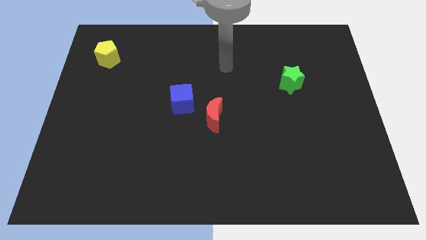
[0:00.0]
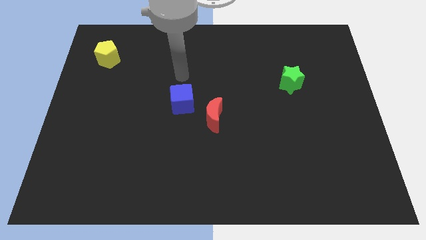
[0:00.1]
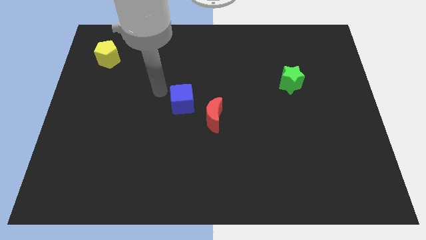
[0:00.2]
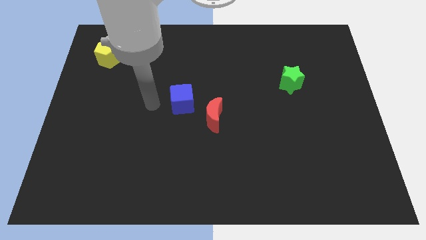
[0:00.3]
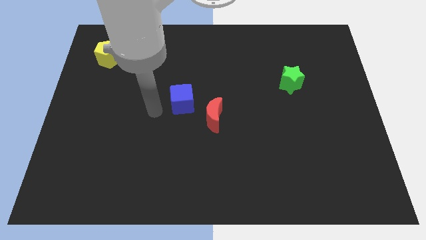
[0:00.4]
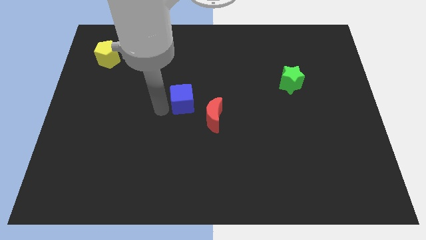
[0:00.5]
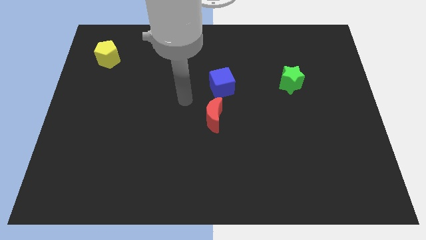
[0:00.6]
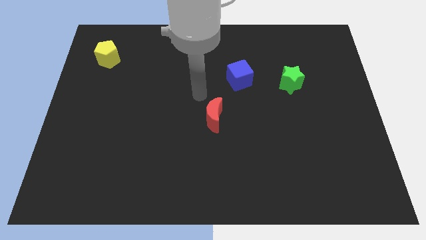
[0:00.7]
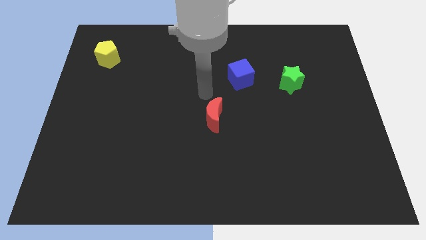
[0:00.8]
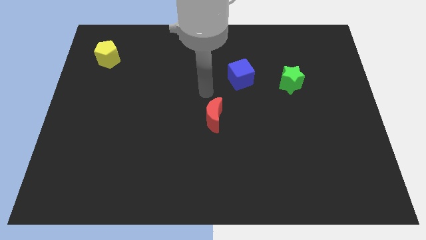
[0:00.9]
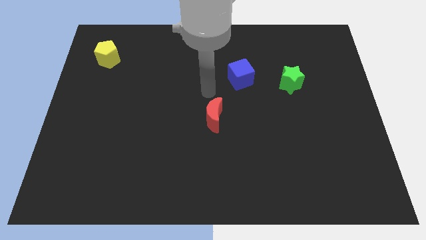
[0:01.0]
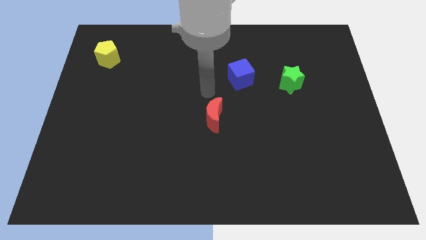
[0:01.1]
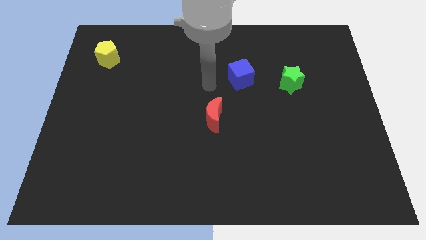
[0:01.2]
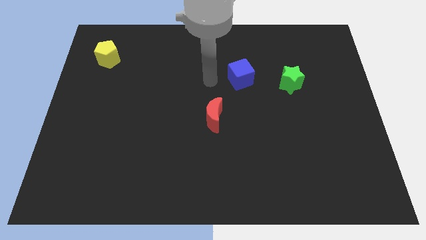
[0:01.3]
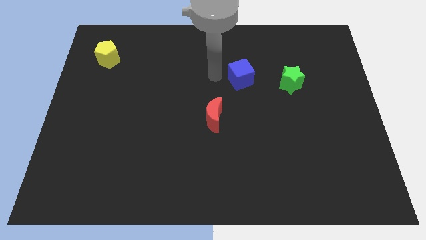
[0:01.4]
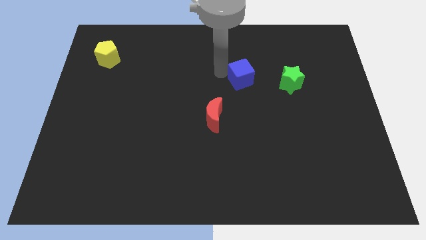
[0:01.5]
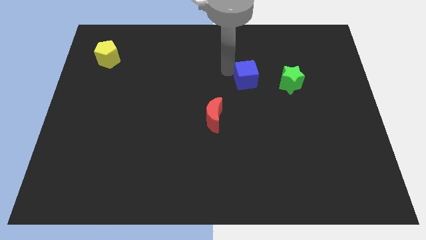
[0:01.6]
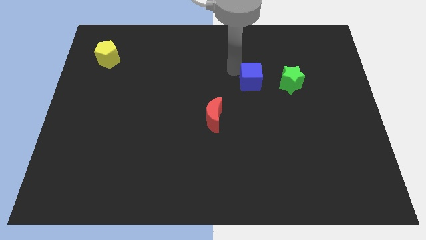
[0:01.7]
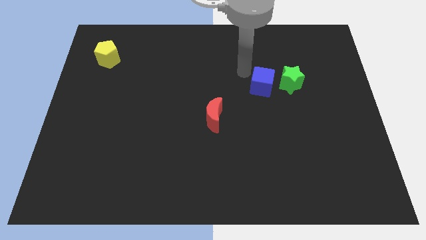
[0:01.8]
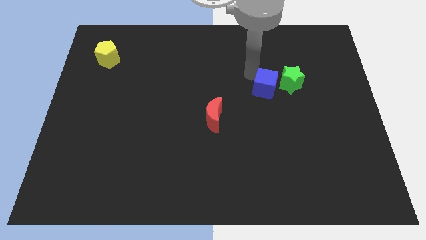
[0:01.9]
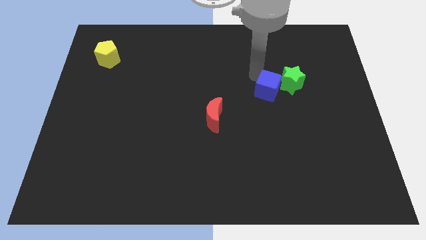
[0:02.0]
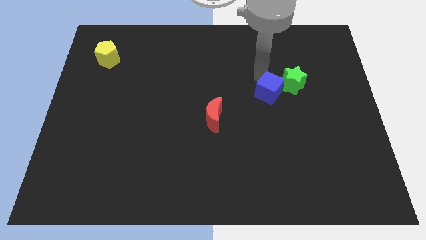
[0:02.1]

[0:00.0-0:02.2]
put the blue block towards the green star

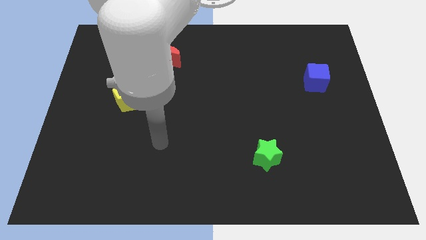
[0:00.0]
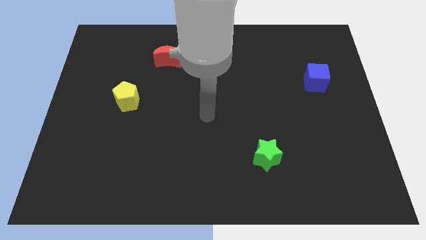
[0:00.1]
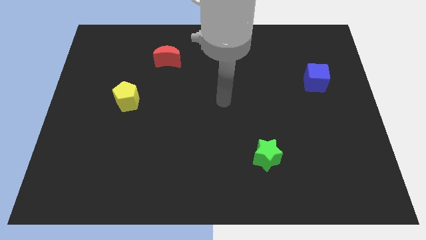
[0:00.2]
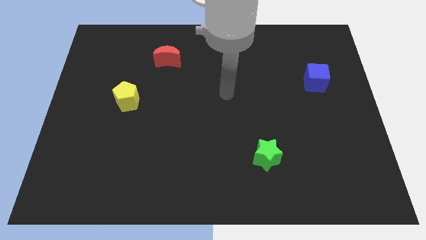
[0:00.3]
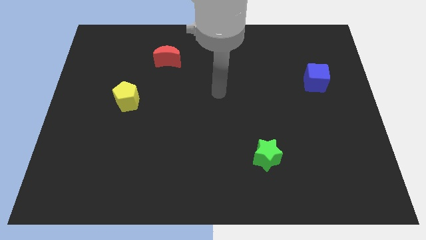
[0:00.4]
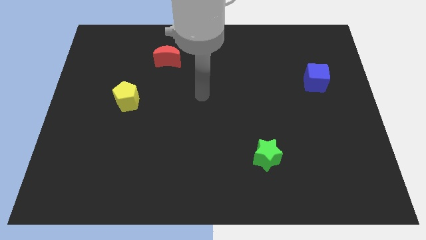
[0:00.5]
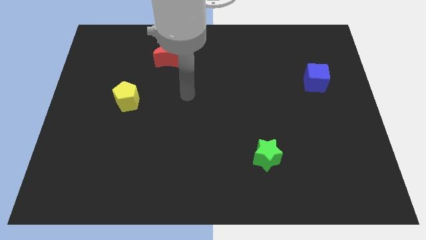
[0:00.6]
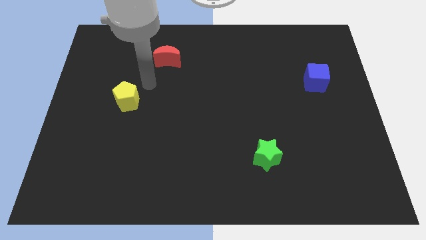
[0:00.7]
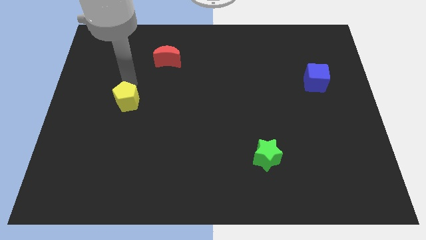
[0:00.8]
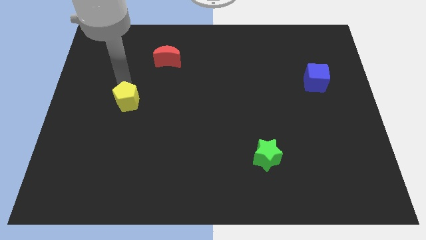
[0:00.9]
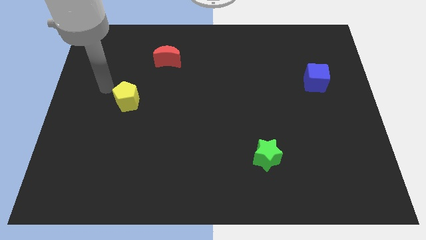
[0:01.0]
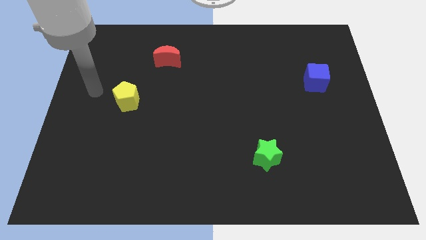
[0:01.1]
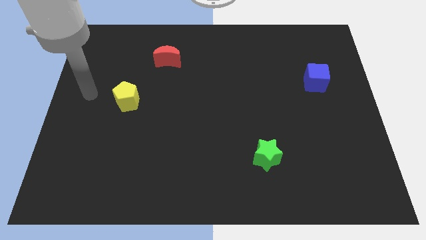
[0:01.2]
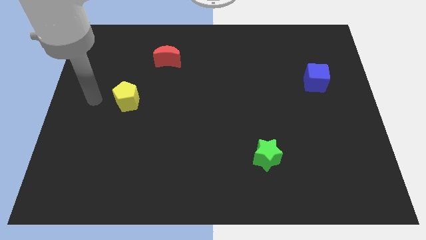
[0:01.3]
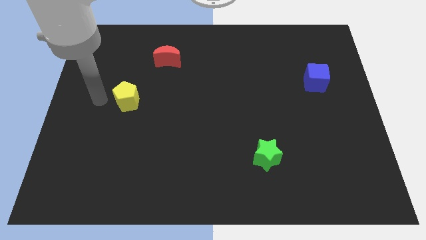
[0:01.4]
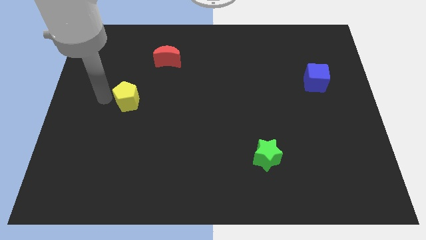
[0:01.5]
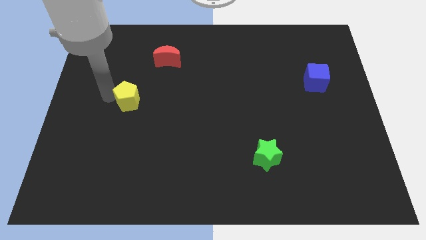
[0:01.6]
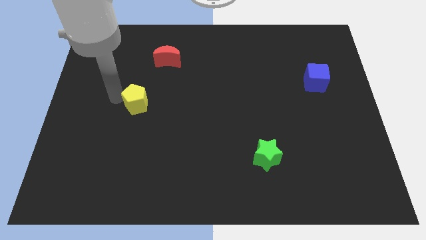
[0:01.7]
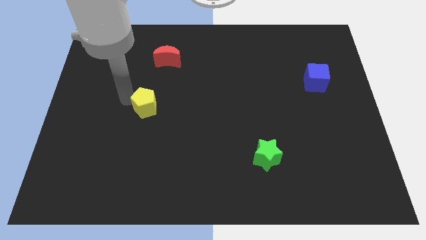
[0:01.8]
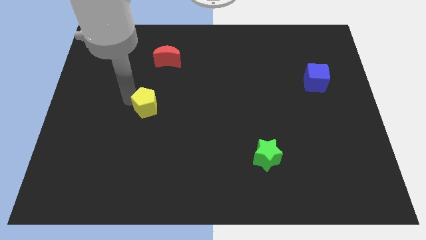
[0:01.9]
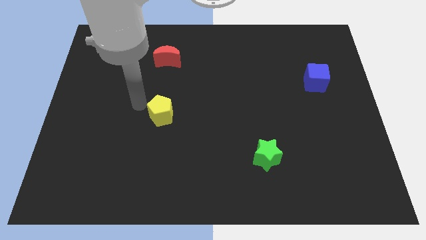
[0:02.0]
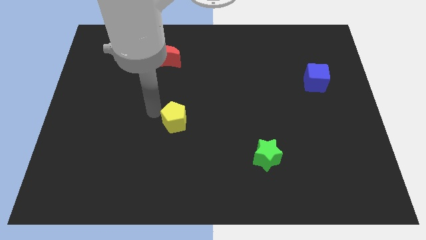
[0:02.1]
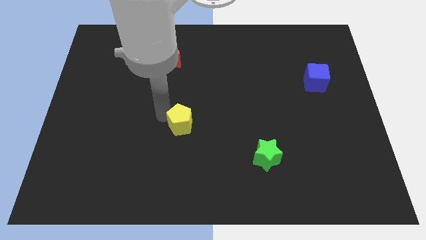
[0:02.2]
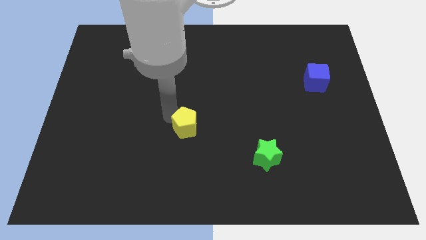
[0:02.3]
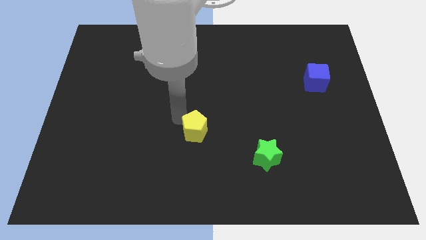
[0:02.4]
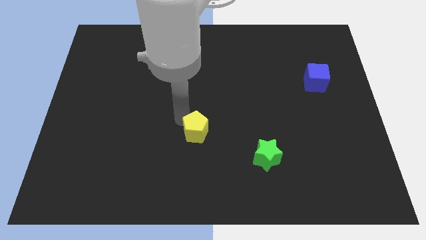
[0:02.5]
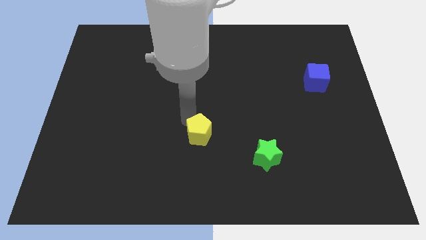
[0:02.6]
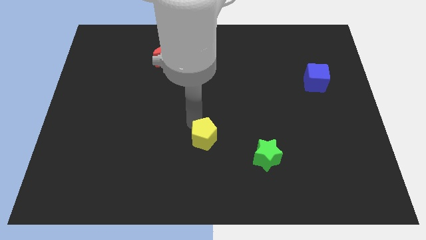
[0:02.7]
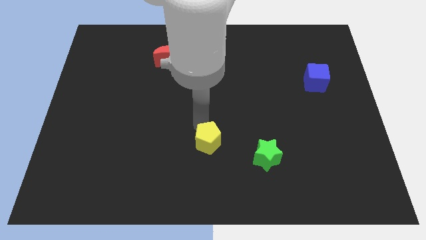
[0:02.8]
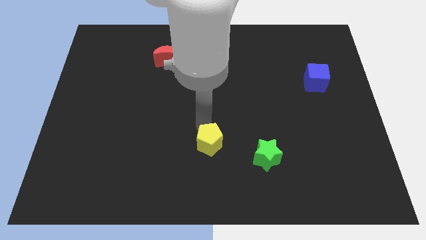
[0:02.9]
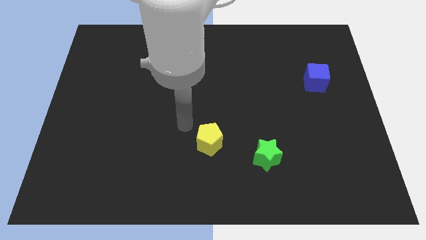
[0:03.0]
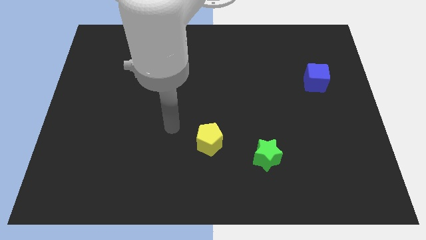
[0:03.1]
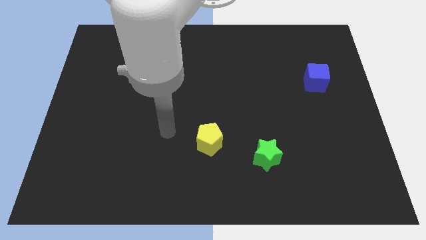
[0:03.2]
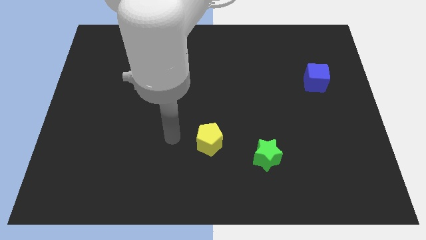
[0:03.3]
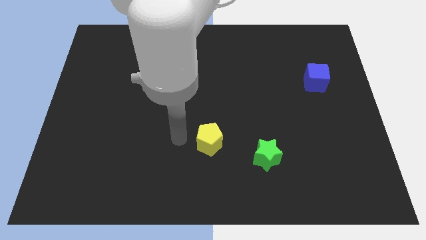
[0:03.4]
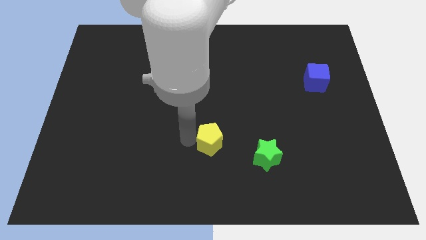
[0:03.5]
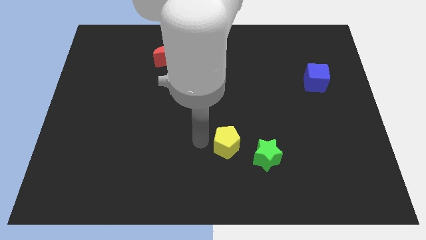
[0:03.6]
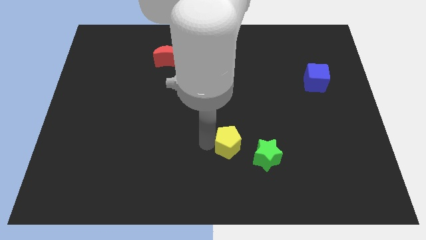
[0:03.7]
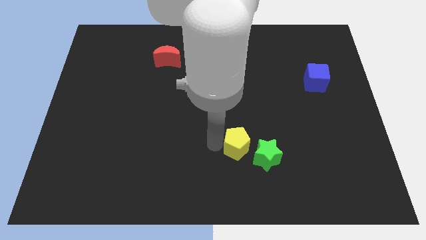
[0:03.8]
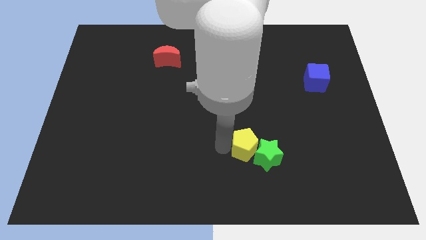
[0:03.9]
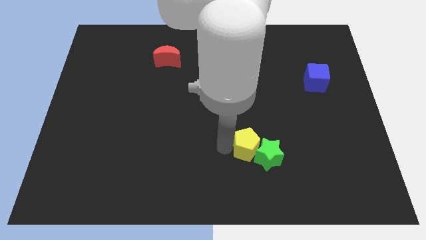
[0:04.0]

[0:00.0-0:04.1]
move the pentagon close to the green star

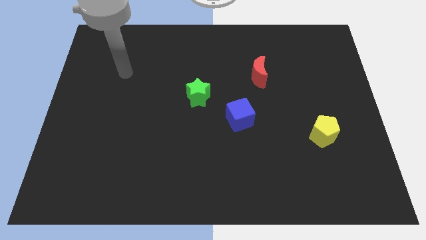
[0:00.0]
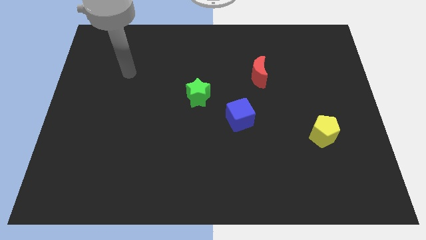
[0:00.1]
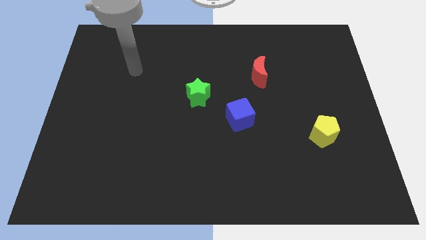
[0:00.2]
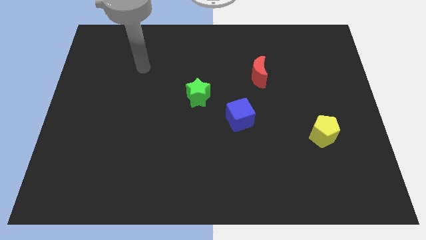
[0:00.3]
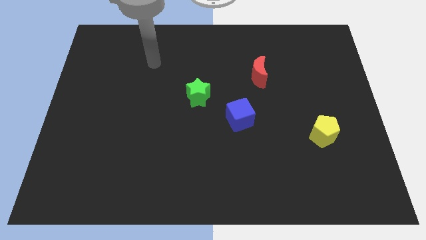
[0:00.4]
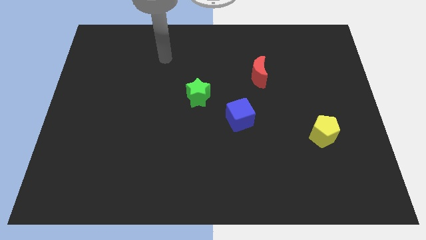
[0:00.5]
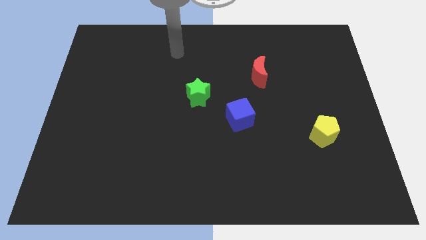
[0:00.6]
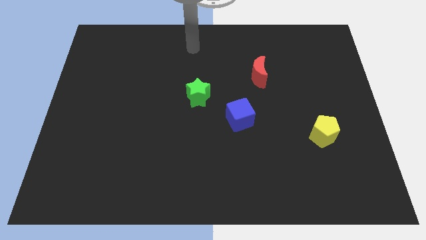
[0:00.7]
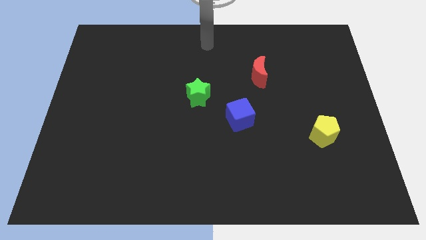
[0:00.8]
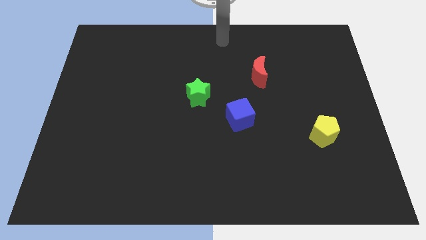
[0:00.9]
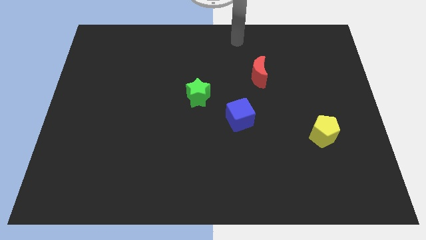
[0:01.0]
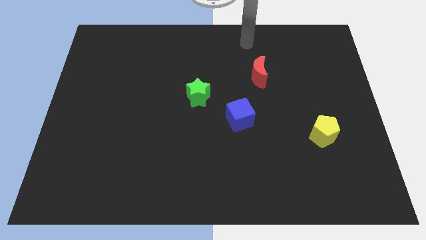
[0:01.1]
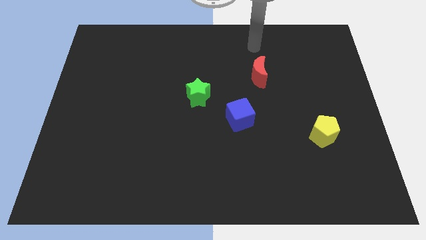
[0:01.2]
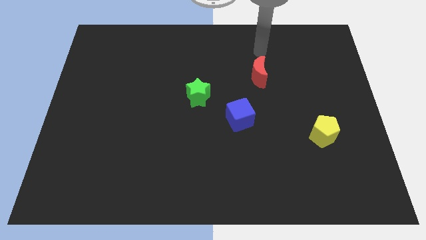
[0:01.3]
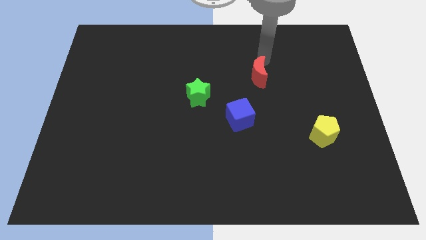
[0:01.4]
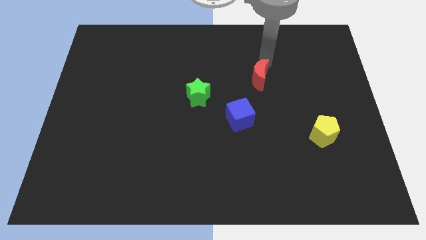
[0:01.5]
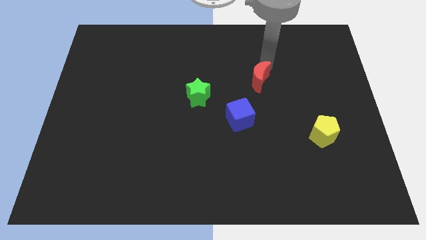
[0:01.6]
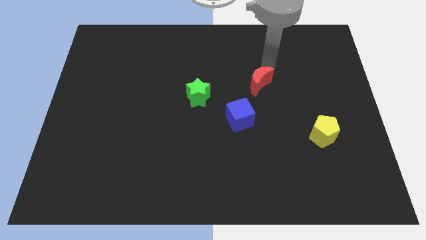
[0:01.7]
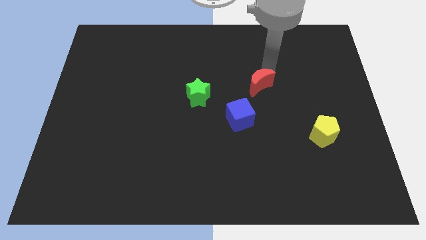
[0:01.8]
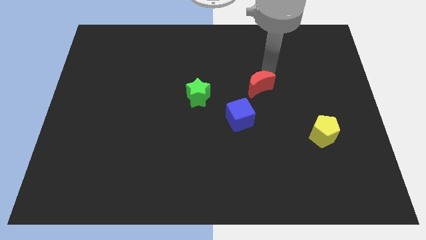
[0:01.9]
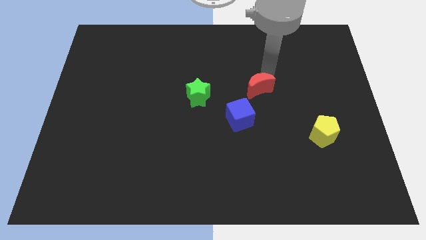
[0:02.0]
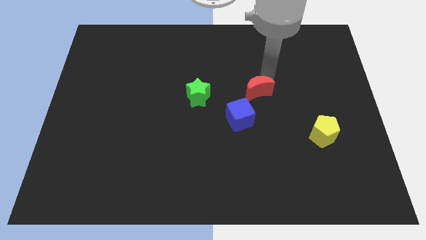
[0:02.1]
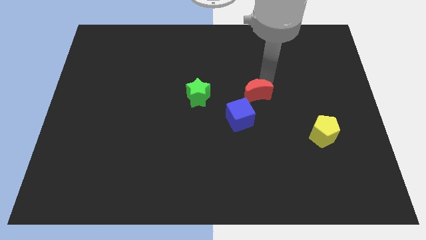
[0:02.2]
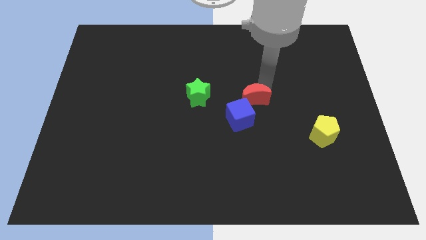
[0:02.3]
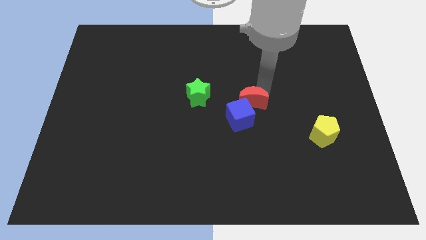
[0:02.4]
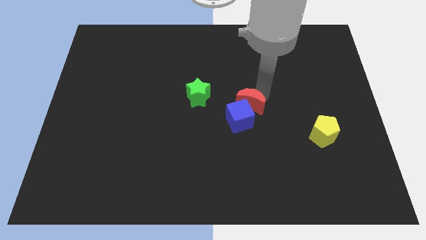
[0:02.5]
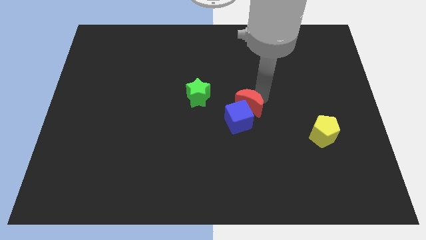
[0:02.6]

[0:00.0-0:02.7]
move the moon close to the blue block
